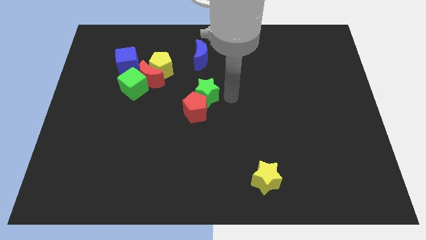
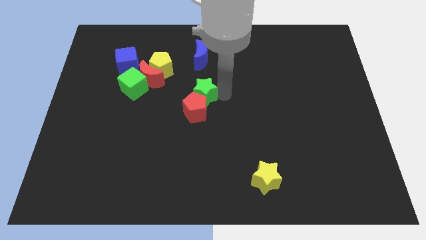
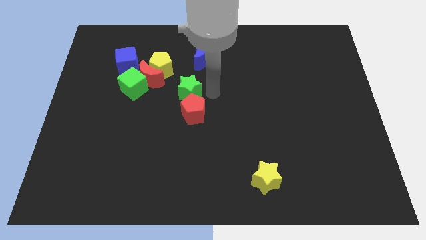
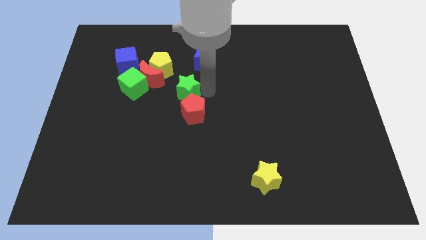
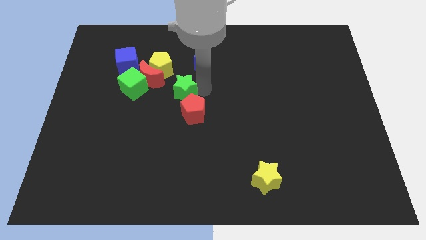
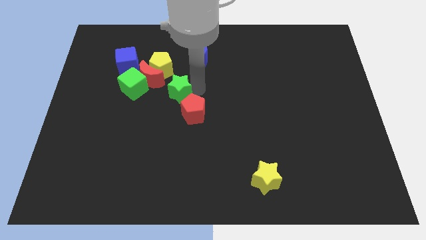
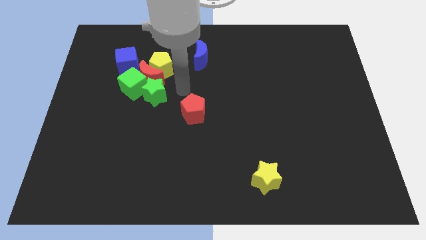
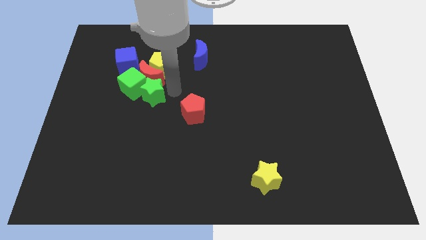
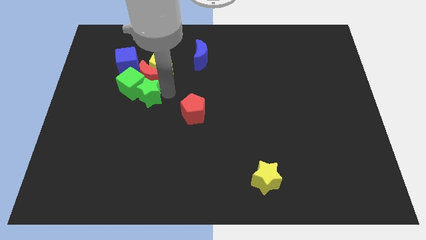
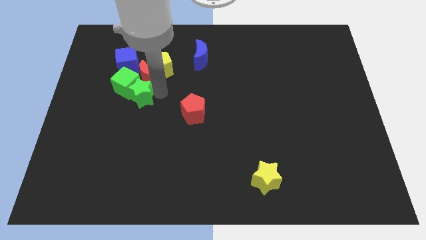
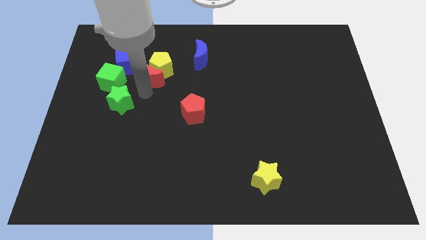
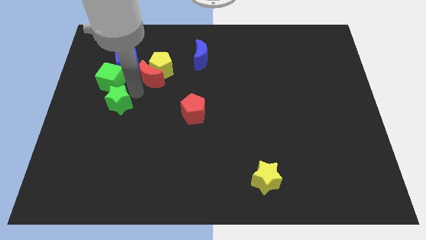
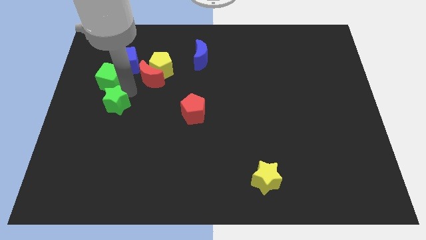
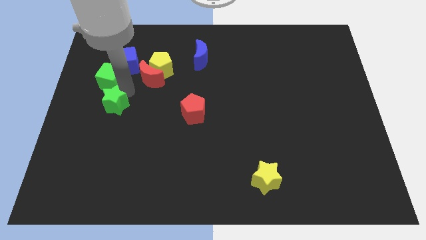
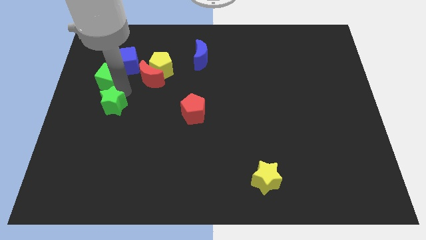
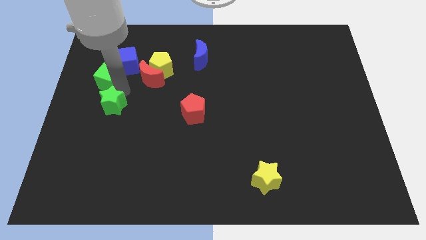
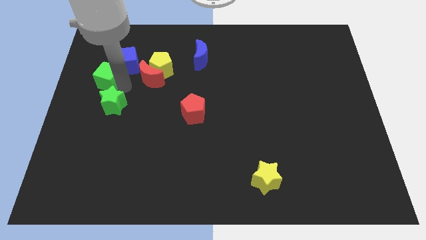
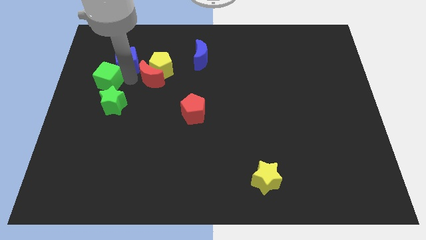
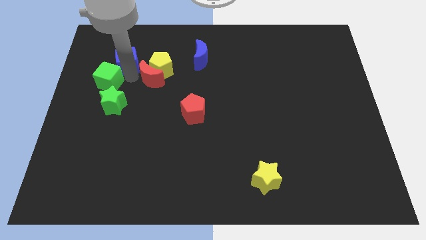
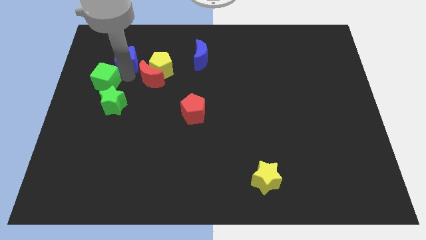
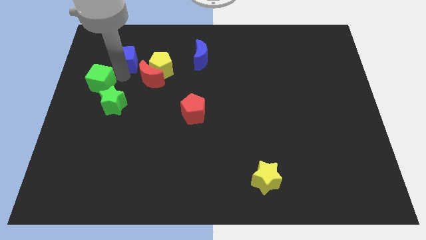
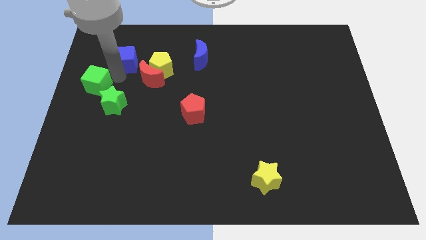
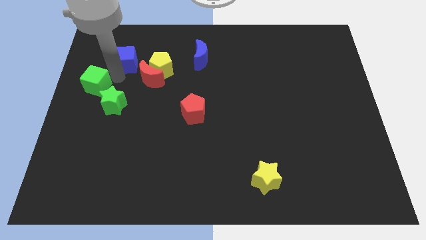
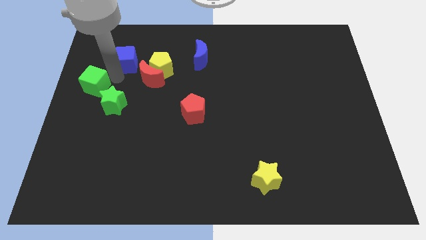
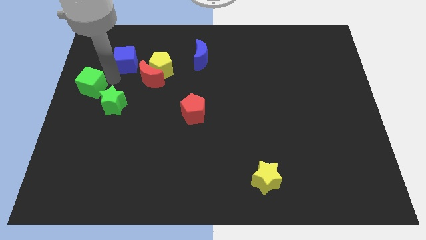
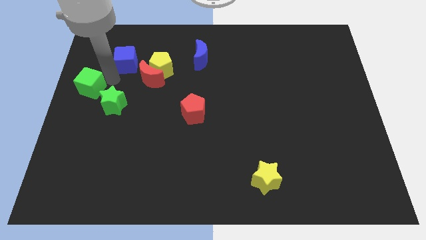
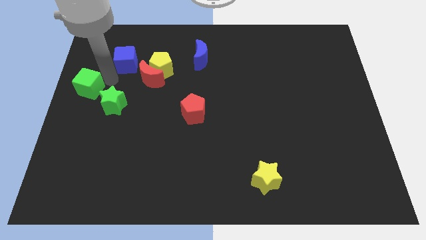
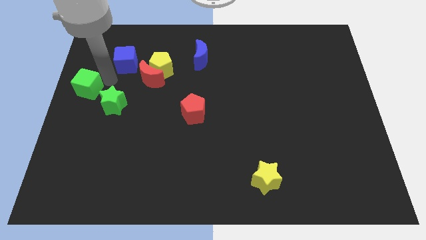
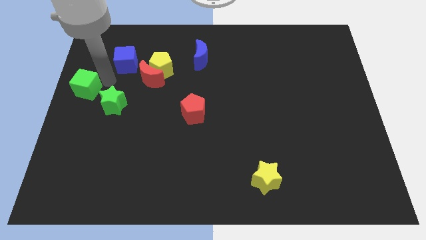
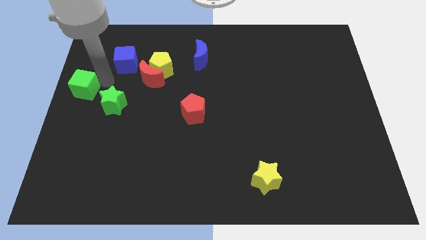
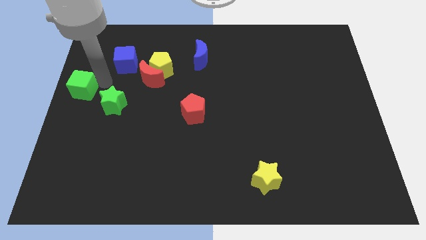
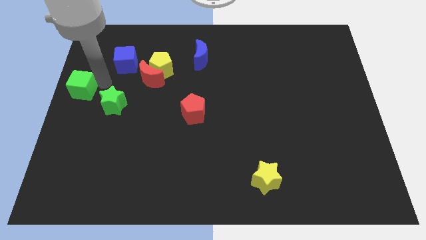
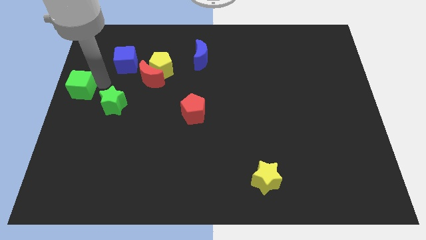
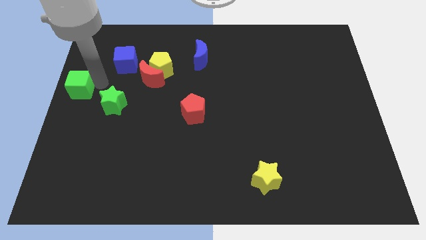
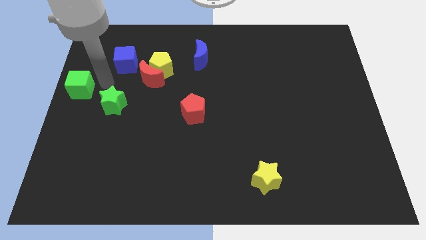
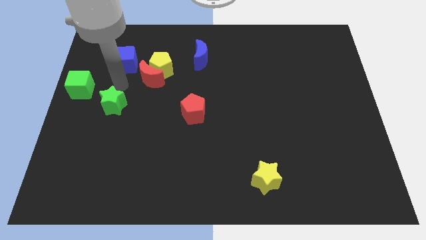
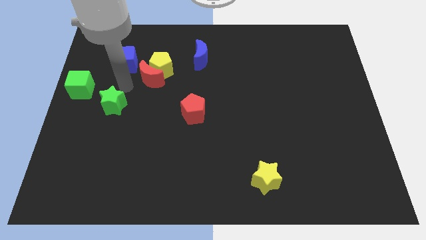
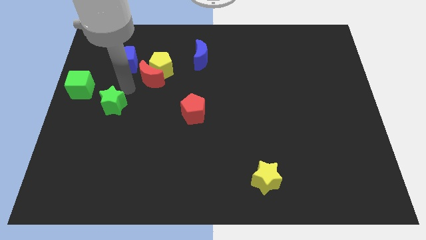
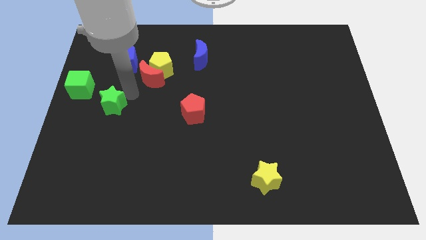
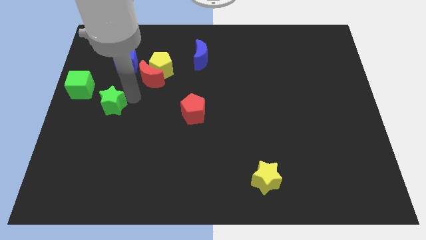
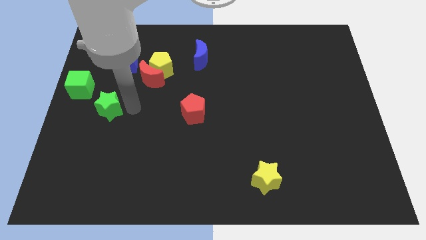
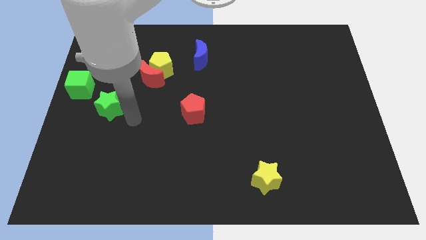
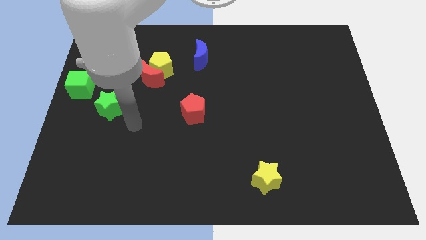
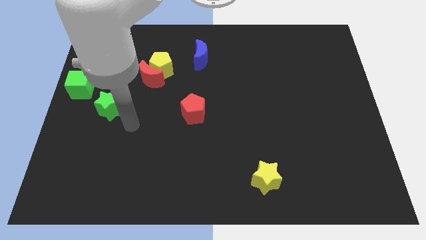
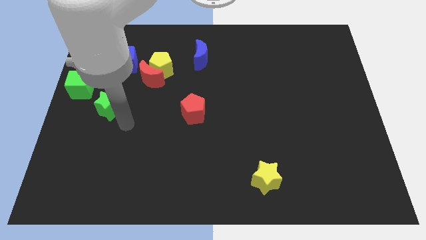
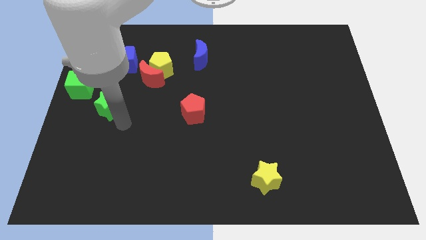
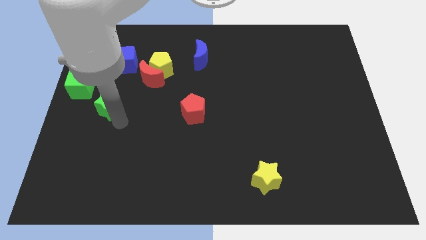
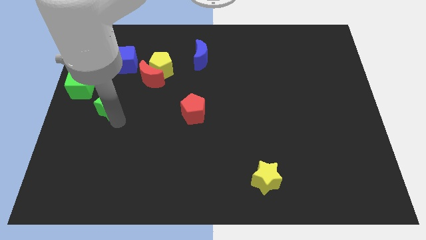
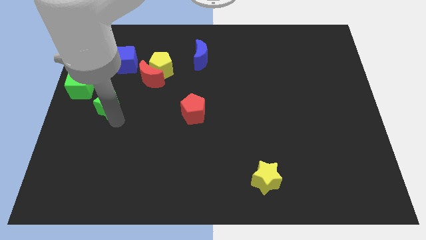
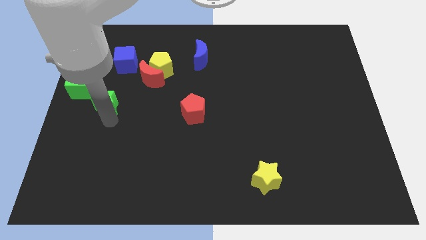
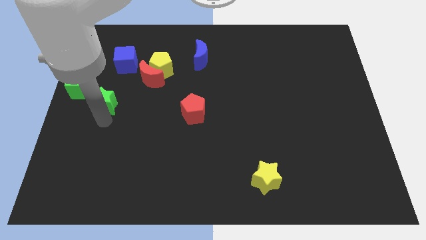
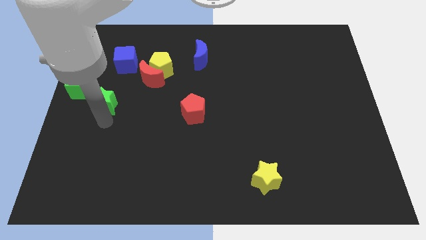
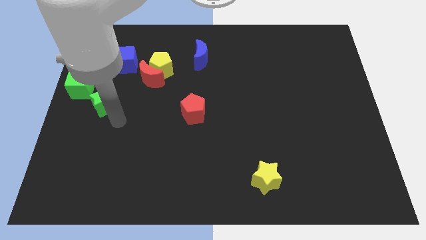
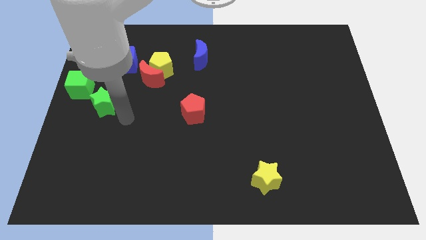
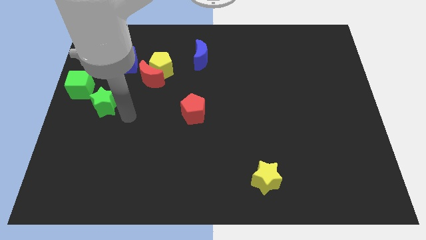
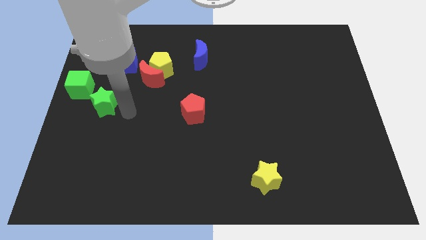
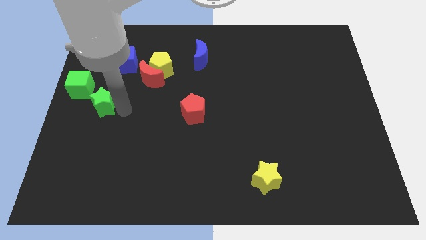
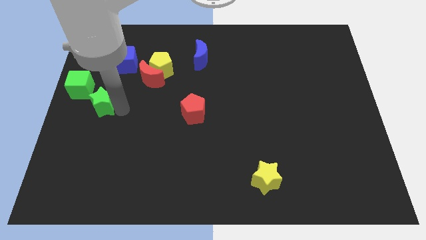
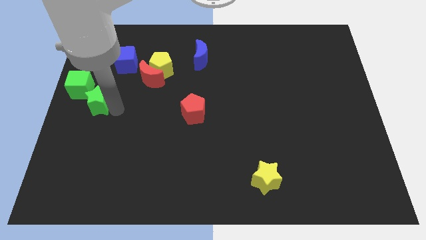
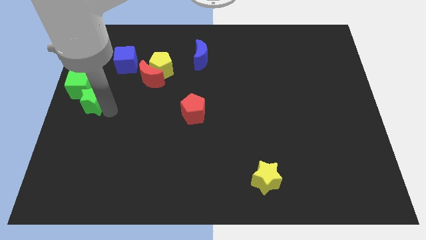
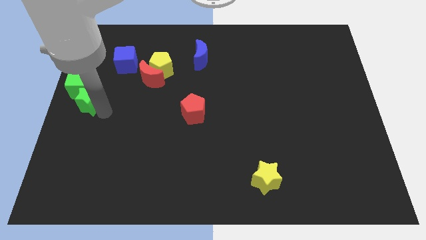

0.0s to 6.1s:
push the green blocks towards the center left side of the board

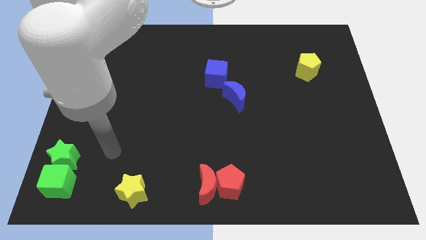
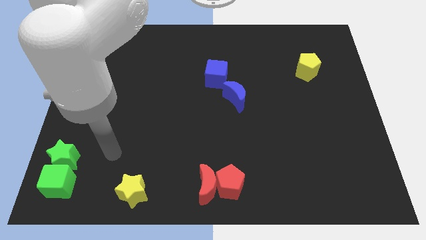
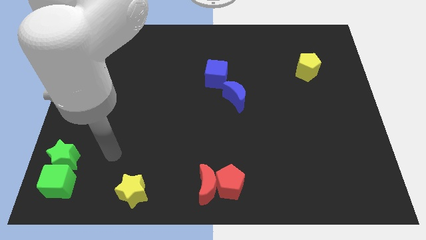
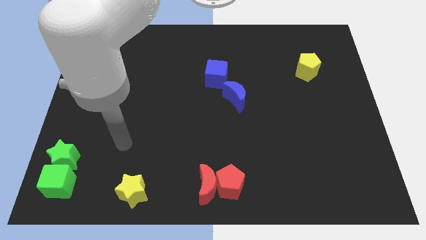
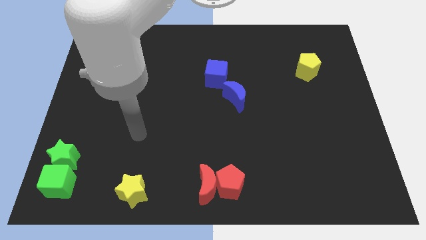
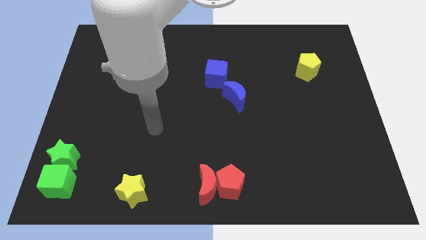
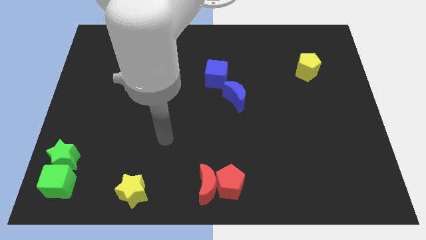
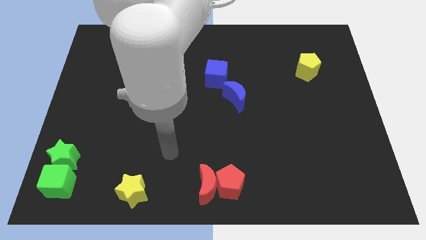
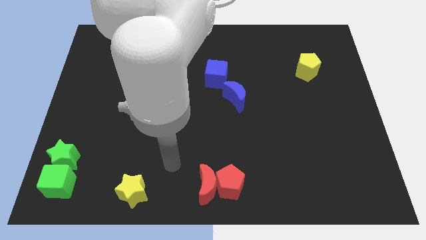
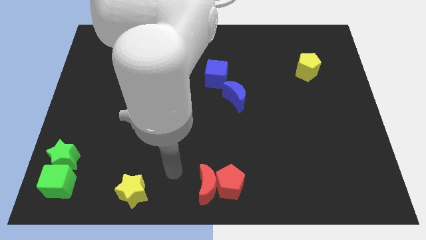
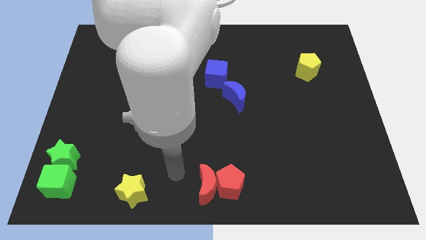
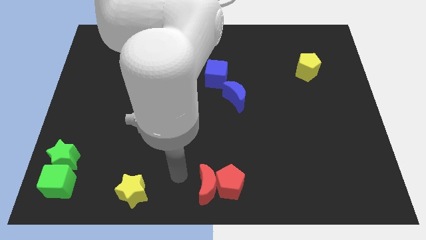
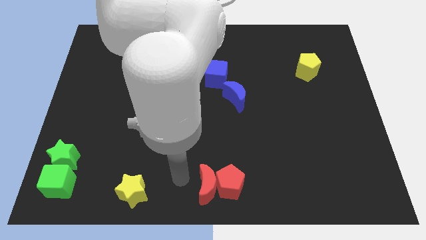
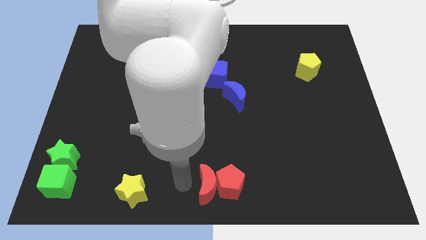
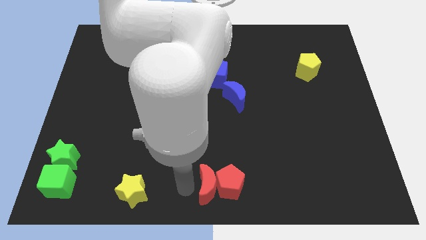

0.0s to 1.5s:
point your arm in between the yellow star and the red moon

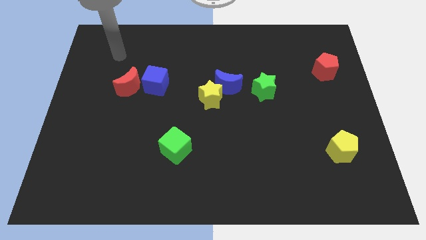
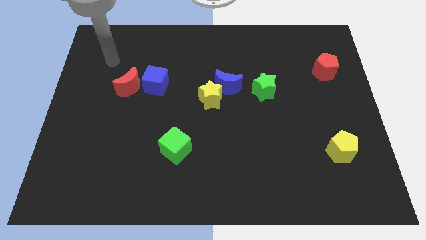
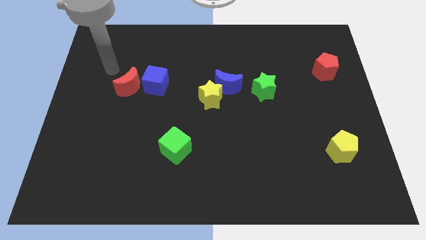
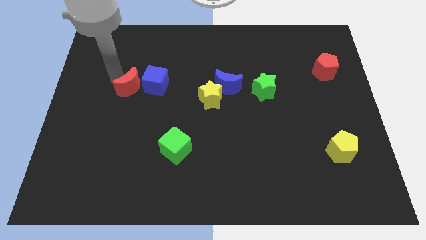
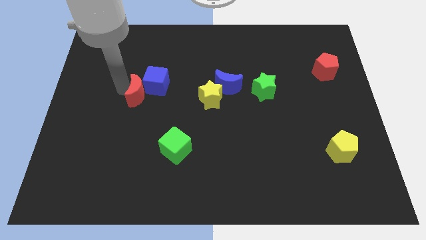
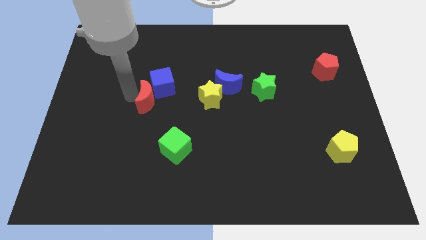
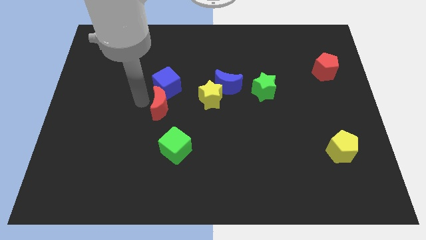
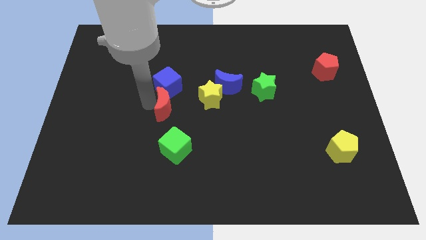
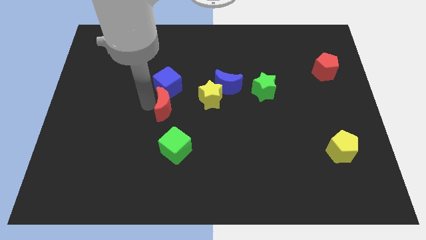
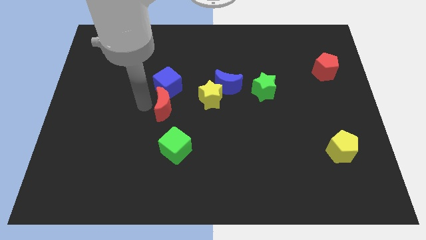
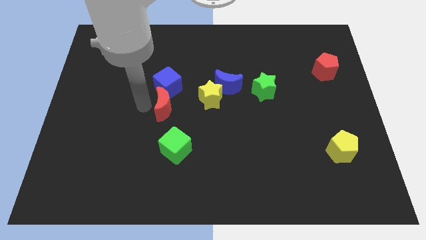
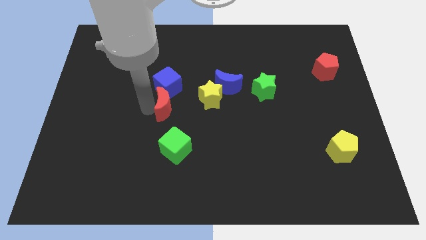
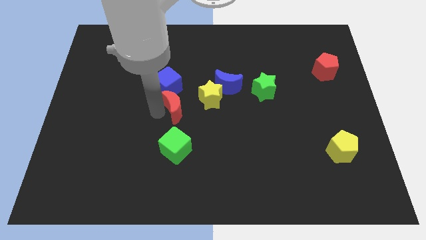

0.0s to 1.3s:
put the red moon to the bottom of the blue cube
